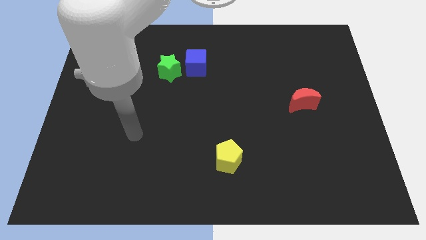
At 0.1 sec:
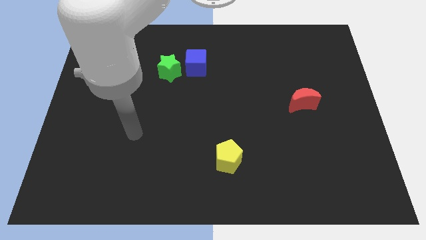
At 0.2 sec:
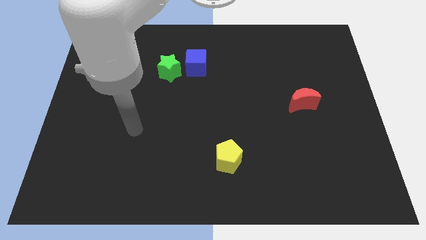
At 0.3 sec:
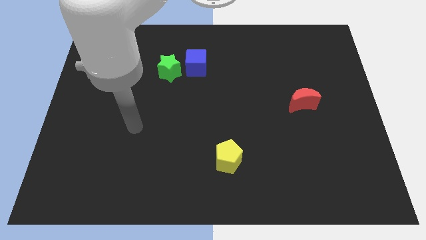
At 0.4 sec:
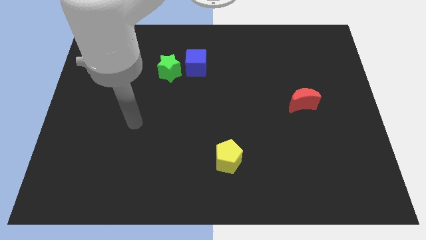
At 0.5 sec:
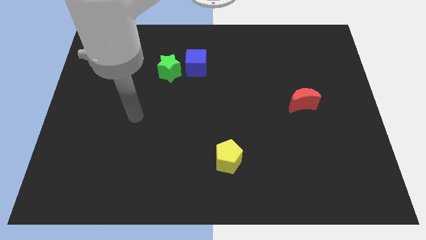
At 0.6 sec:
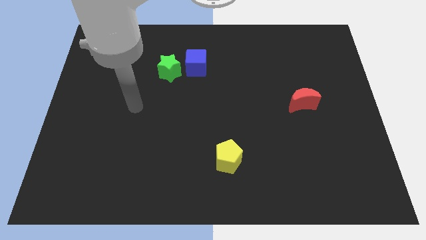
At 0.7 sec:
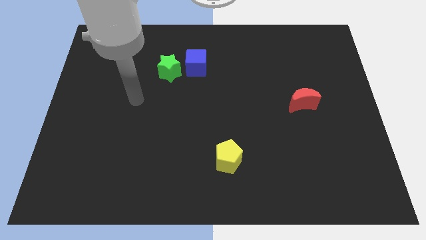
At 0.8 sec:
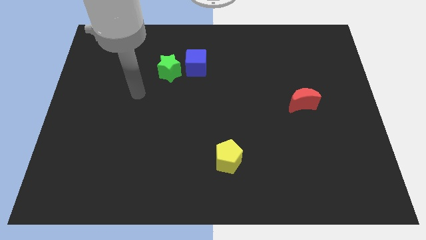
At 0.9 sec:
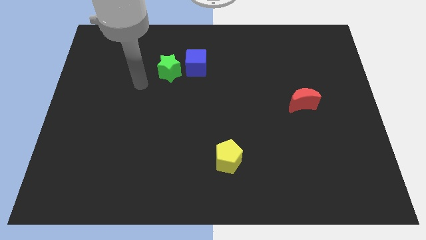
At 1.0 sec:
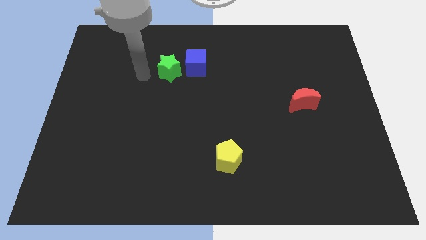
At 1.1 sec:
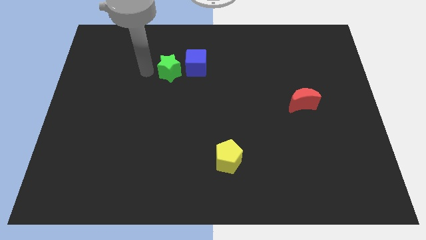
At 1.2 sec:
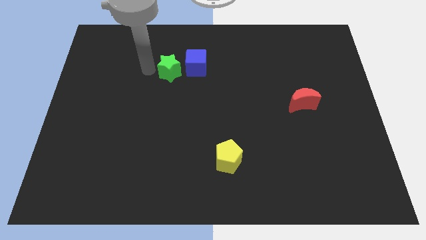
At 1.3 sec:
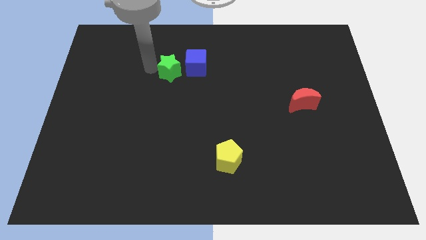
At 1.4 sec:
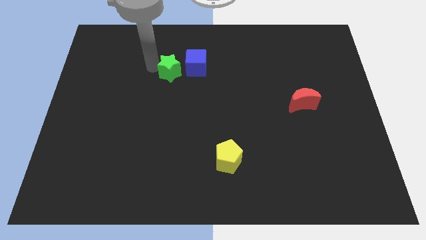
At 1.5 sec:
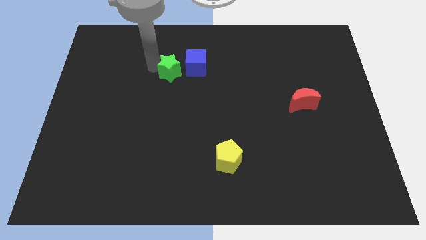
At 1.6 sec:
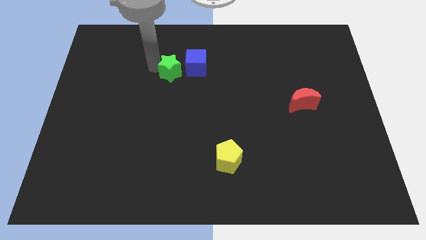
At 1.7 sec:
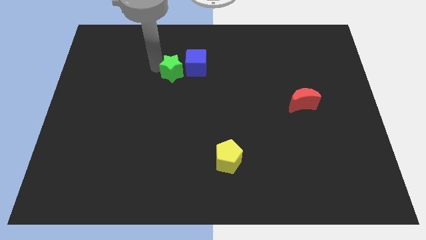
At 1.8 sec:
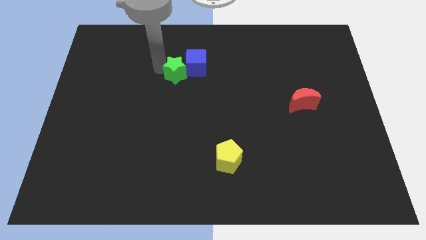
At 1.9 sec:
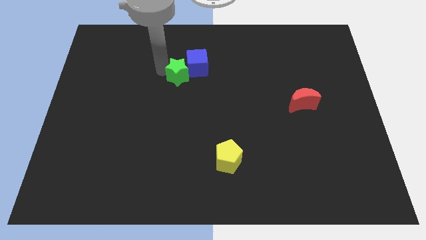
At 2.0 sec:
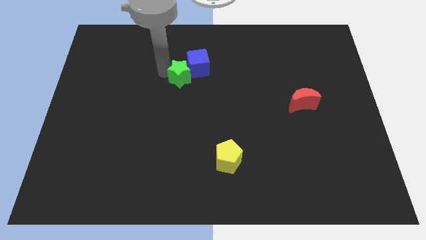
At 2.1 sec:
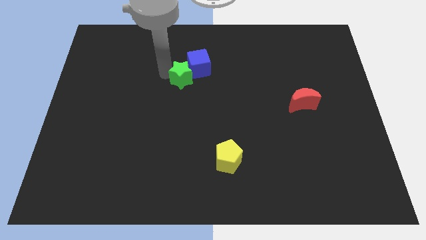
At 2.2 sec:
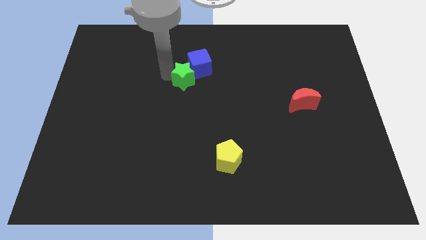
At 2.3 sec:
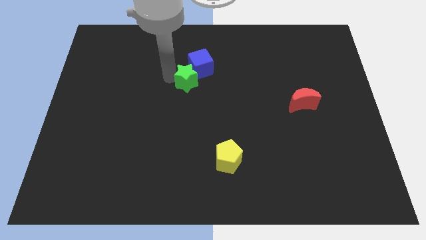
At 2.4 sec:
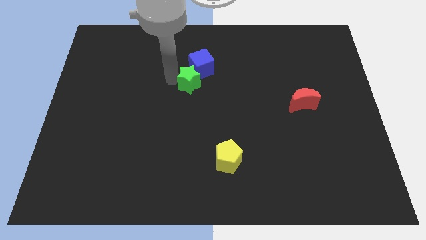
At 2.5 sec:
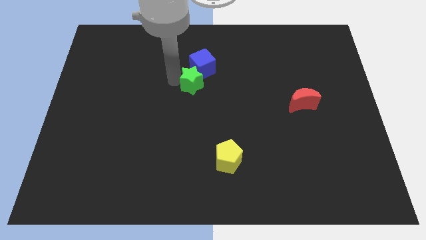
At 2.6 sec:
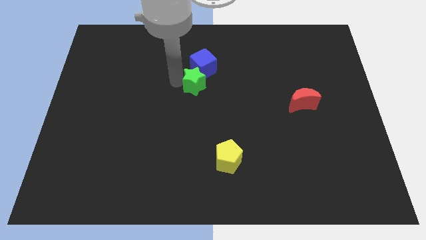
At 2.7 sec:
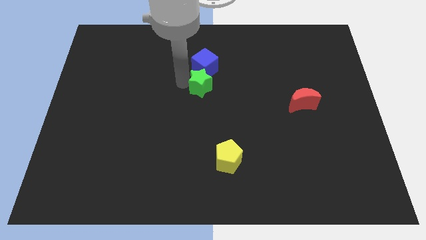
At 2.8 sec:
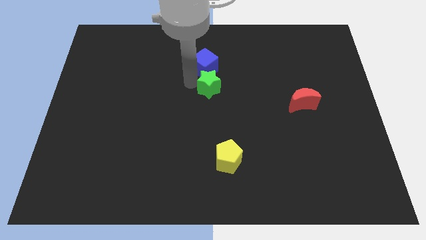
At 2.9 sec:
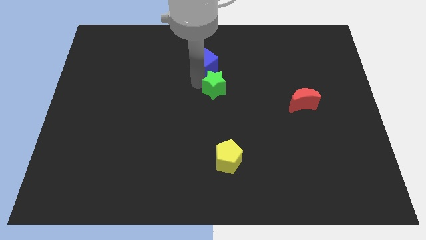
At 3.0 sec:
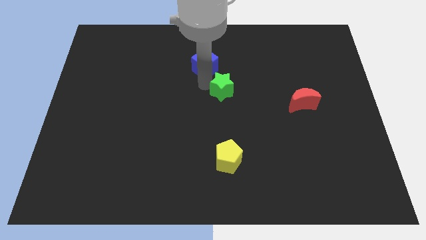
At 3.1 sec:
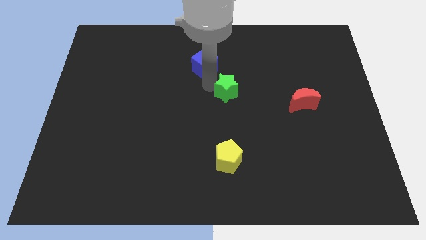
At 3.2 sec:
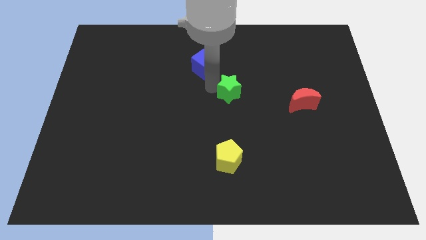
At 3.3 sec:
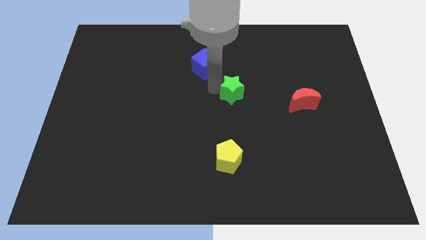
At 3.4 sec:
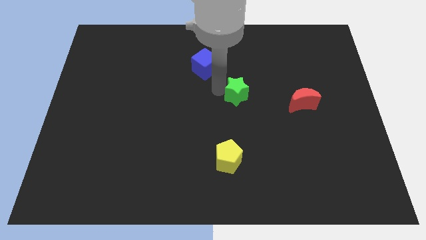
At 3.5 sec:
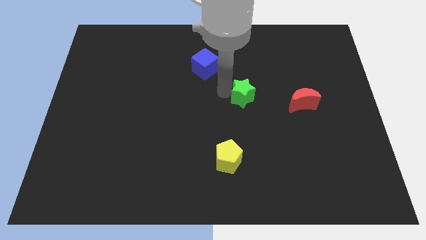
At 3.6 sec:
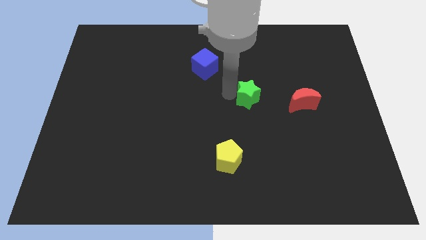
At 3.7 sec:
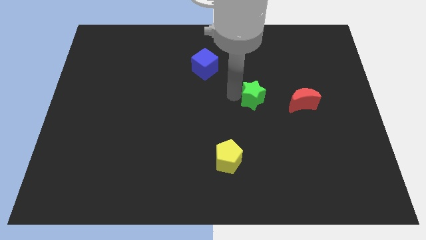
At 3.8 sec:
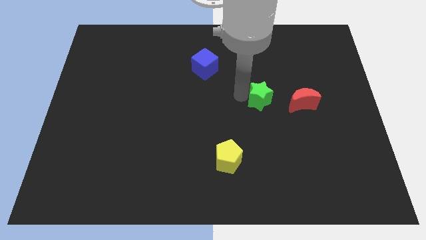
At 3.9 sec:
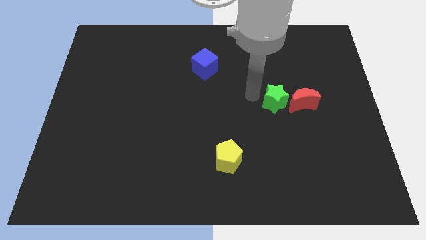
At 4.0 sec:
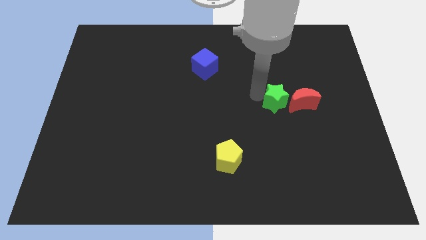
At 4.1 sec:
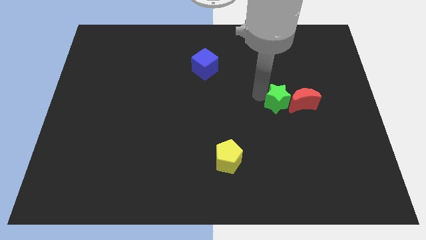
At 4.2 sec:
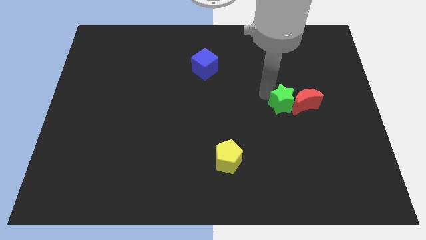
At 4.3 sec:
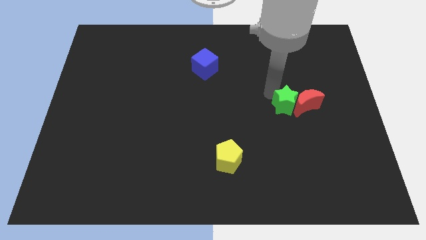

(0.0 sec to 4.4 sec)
push the star next to the moon

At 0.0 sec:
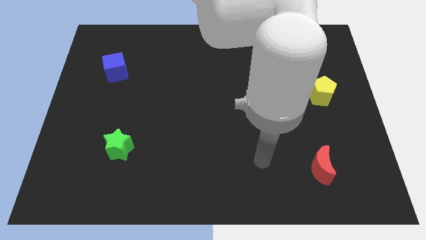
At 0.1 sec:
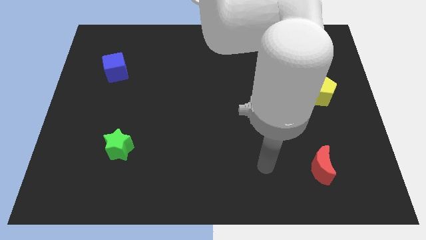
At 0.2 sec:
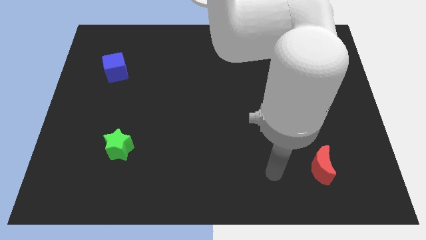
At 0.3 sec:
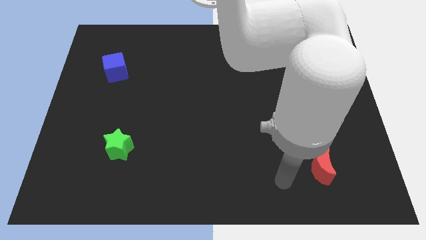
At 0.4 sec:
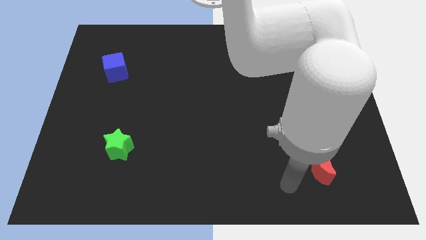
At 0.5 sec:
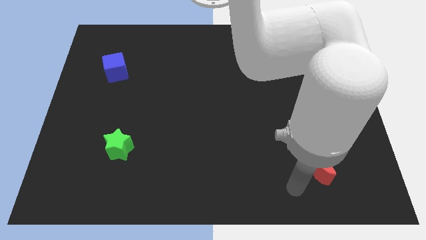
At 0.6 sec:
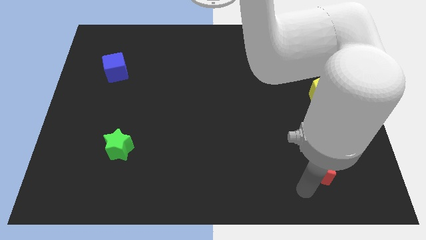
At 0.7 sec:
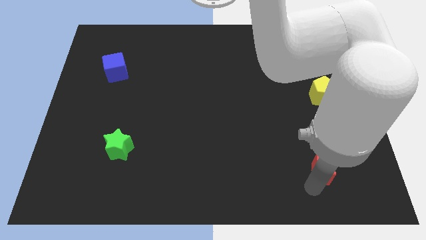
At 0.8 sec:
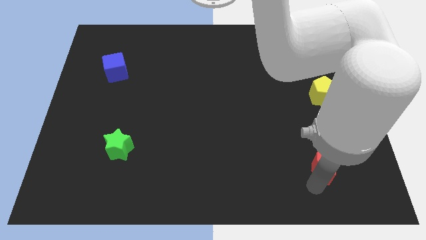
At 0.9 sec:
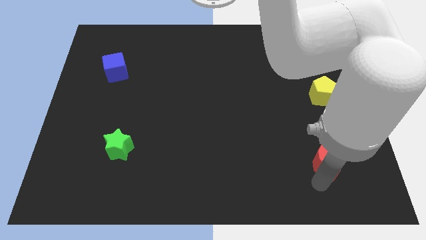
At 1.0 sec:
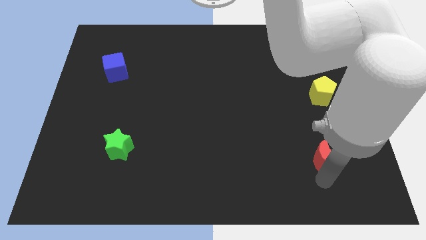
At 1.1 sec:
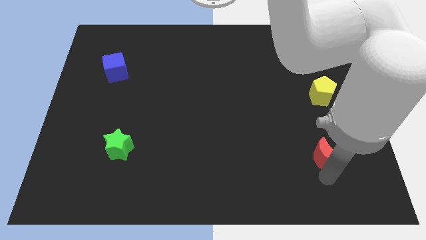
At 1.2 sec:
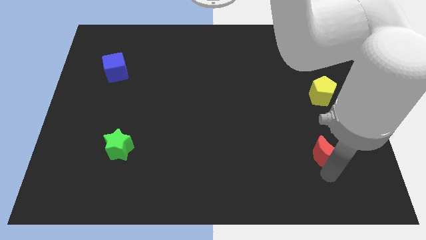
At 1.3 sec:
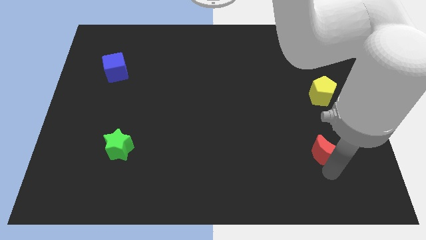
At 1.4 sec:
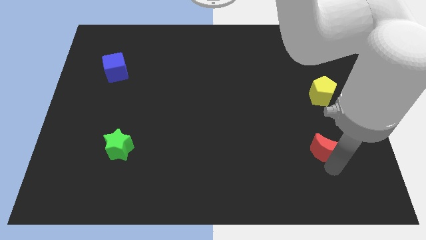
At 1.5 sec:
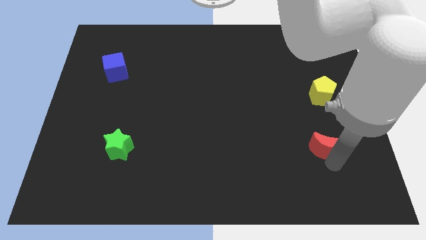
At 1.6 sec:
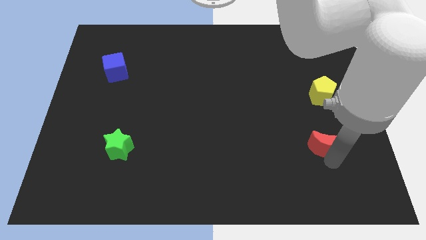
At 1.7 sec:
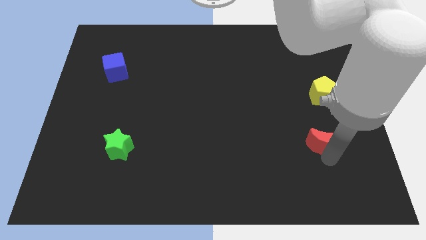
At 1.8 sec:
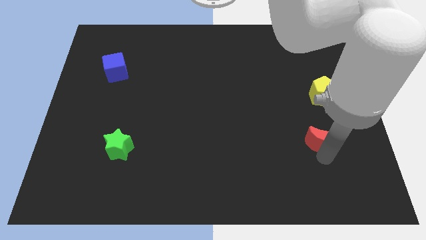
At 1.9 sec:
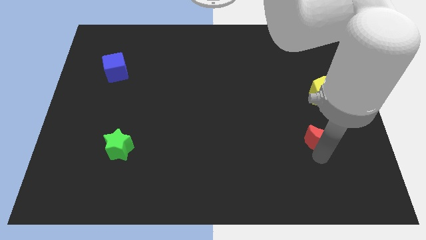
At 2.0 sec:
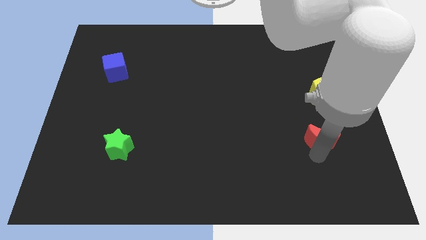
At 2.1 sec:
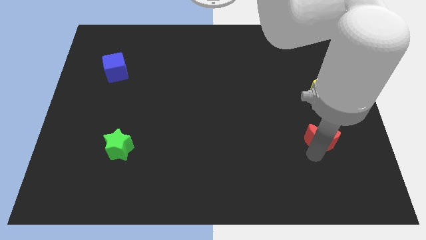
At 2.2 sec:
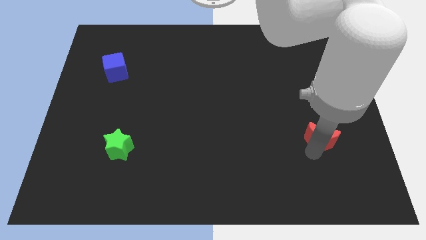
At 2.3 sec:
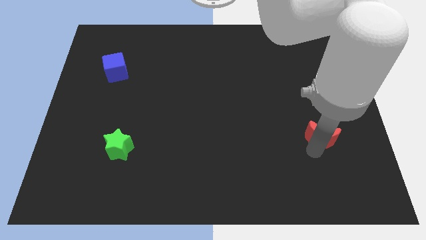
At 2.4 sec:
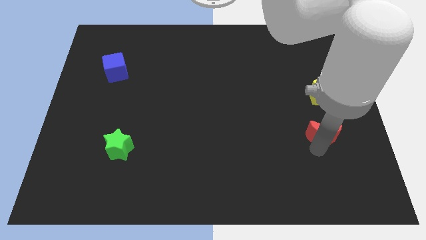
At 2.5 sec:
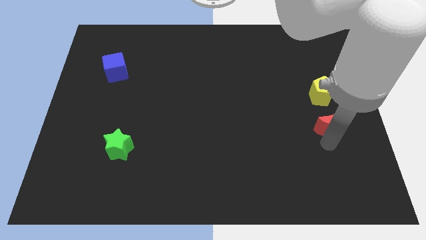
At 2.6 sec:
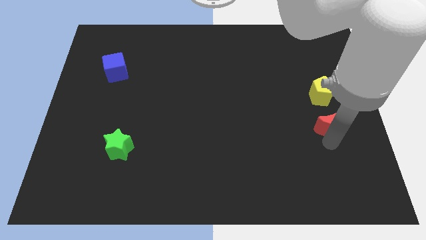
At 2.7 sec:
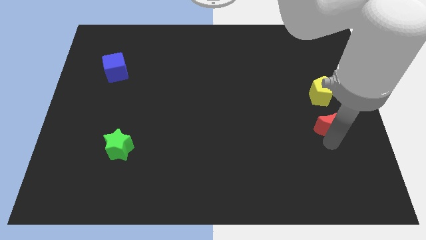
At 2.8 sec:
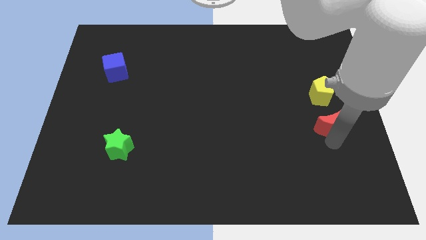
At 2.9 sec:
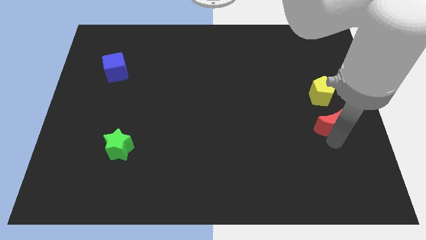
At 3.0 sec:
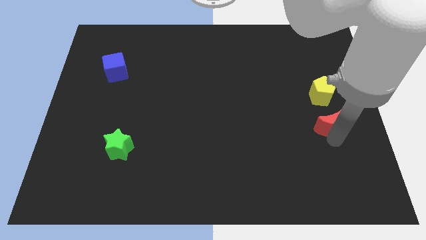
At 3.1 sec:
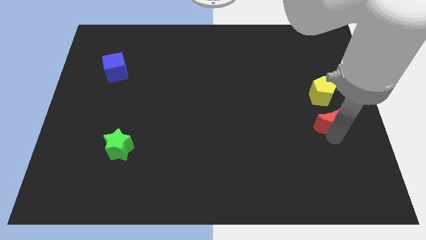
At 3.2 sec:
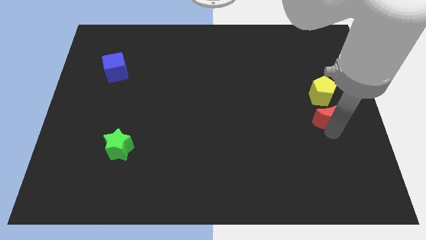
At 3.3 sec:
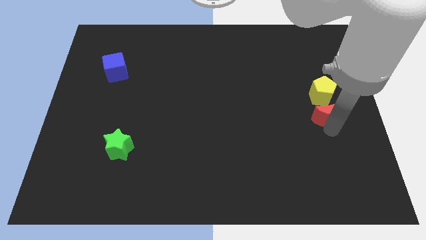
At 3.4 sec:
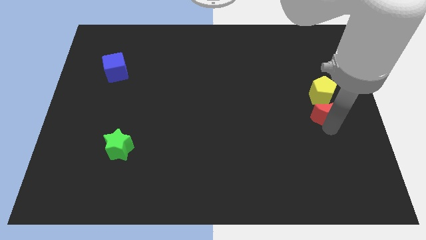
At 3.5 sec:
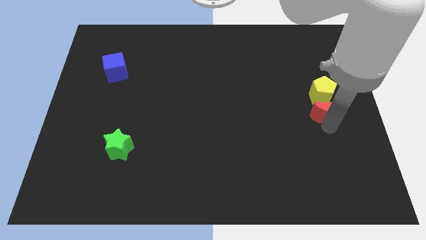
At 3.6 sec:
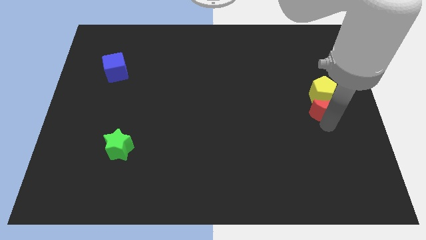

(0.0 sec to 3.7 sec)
put the red moon close to the yellow pentagon

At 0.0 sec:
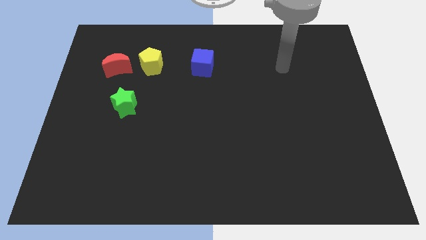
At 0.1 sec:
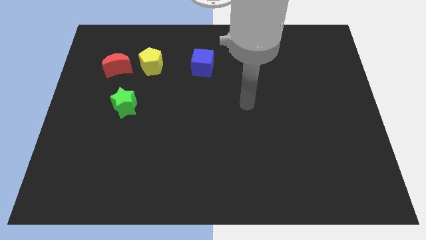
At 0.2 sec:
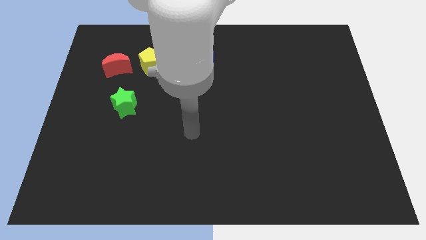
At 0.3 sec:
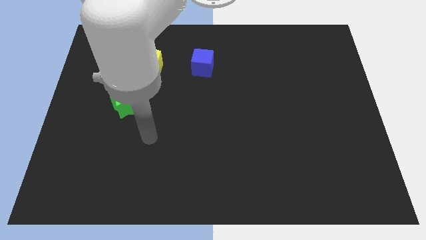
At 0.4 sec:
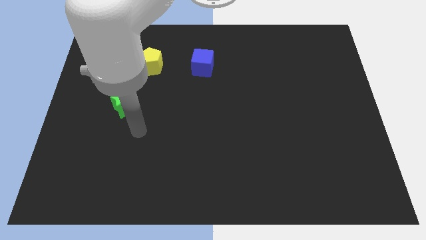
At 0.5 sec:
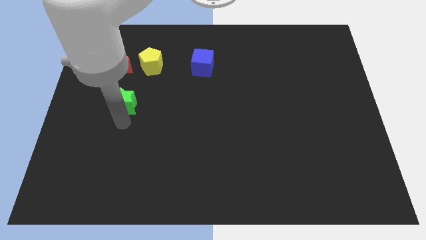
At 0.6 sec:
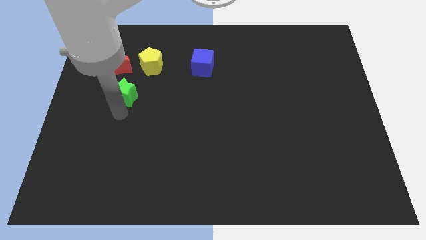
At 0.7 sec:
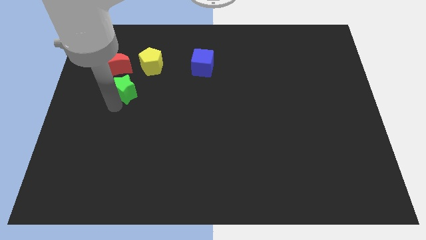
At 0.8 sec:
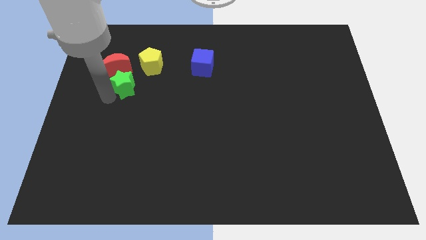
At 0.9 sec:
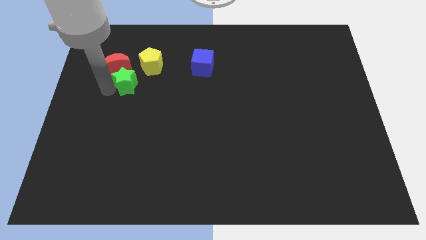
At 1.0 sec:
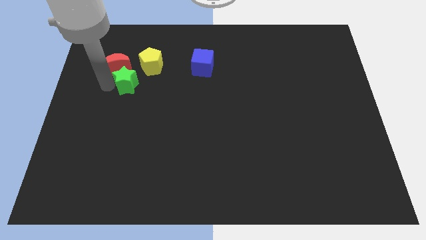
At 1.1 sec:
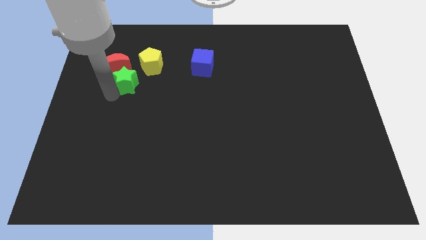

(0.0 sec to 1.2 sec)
put the star next to the red block
